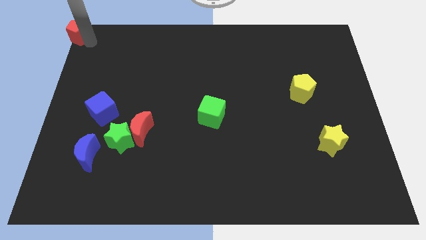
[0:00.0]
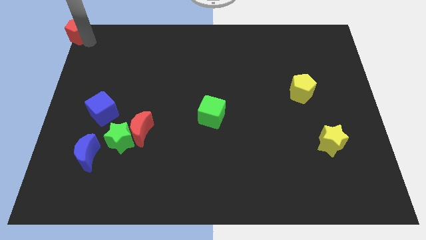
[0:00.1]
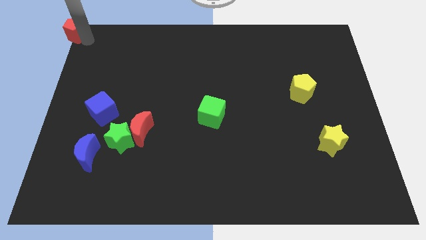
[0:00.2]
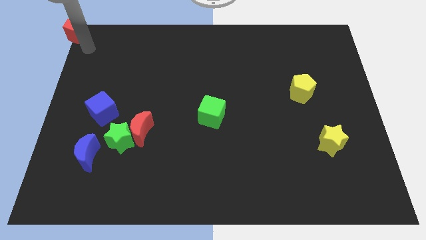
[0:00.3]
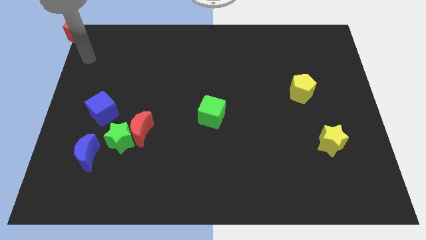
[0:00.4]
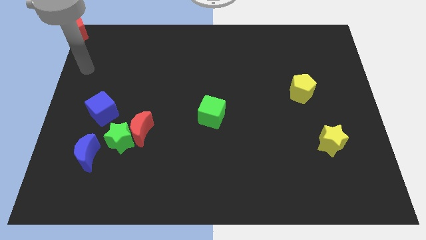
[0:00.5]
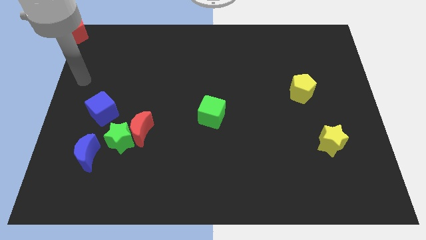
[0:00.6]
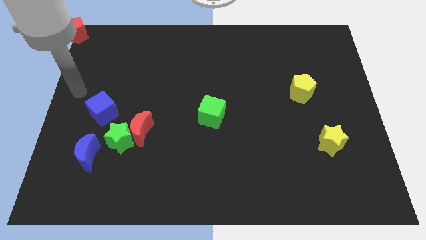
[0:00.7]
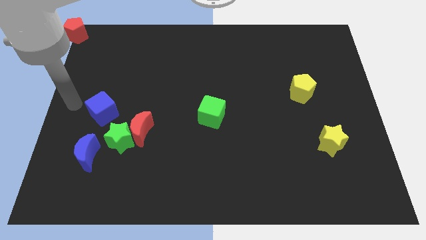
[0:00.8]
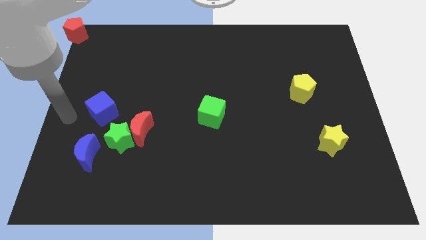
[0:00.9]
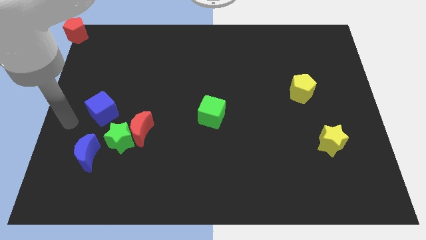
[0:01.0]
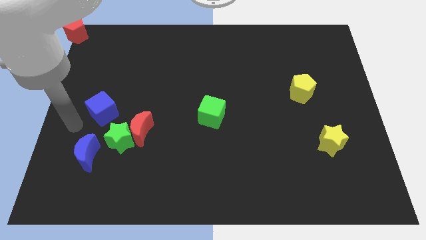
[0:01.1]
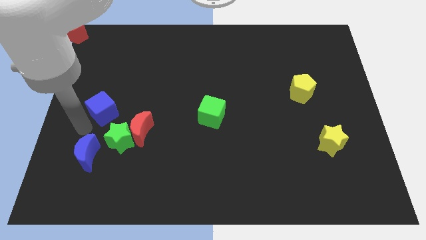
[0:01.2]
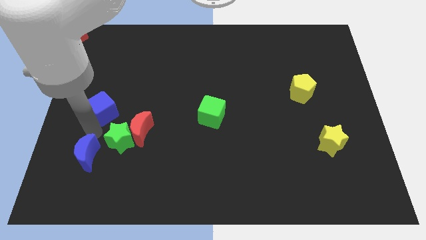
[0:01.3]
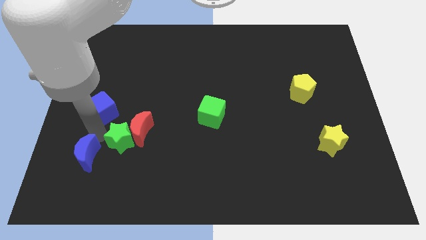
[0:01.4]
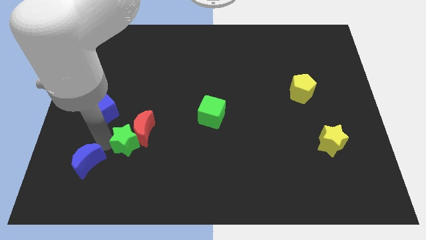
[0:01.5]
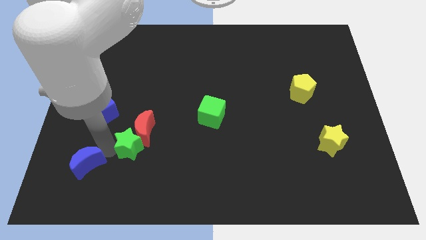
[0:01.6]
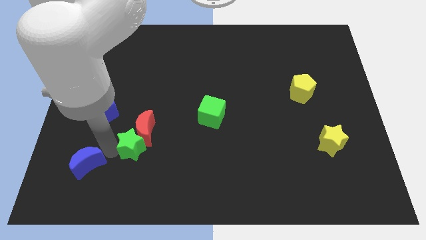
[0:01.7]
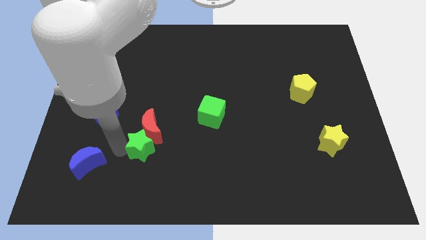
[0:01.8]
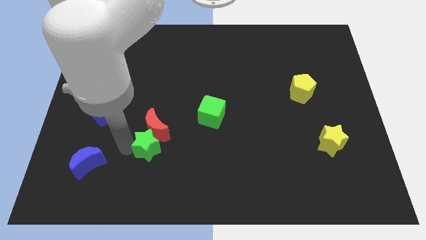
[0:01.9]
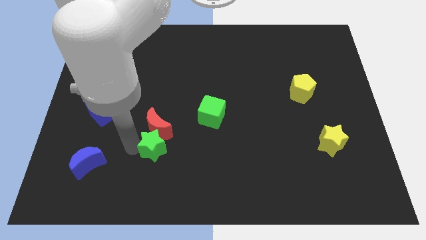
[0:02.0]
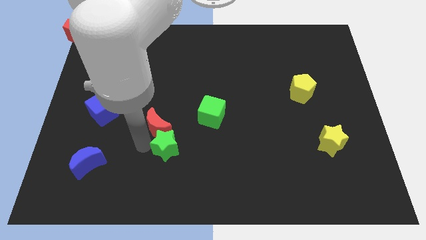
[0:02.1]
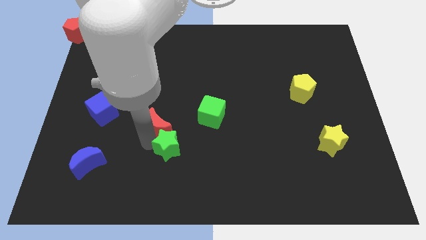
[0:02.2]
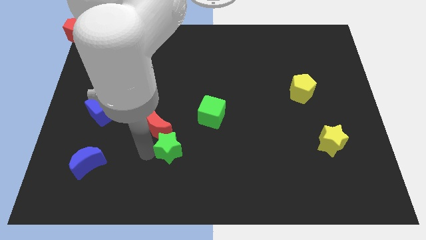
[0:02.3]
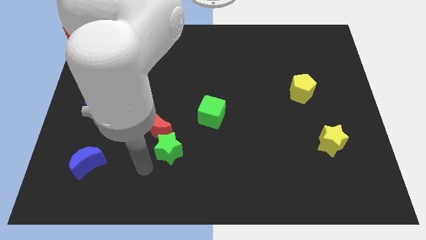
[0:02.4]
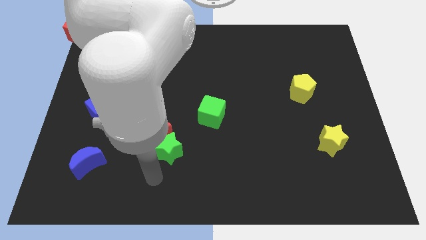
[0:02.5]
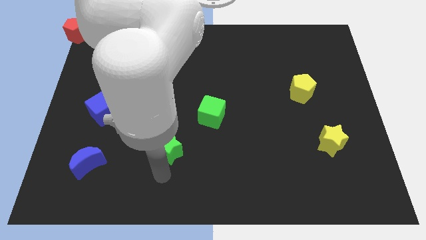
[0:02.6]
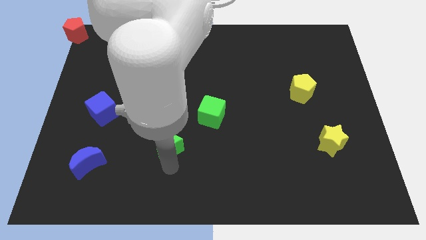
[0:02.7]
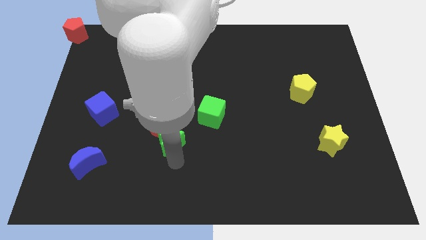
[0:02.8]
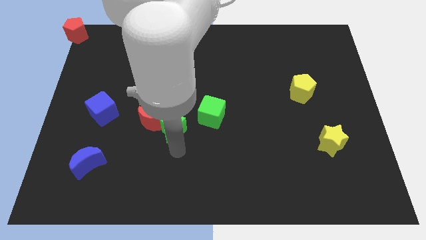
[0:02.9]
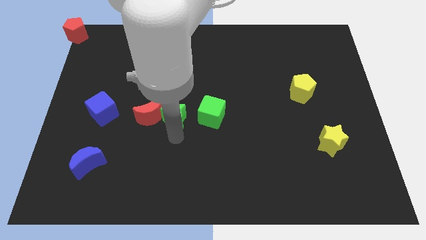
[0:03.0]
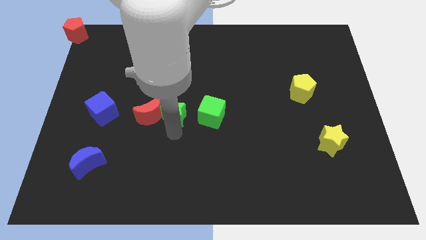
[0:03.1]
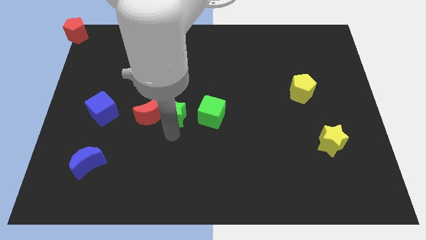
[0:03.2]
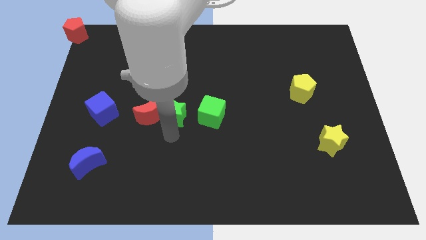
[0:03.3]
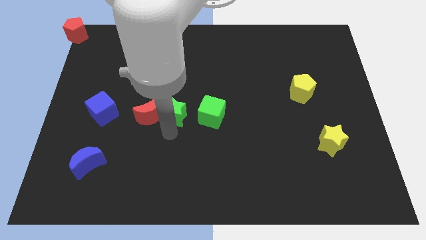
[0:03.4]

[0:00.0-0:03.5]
place the green star right to the red moon

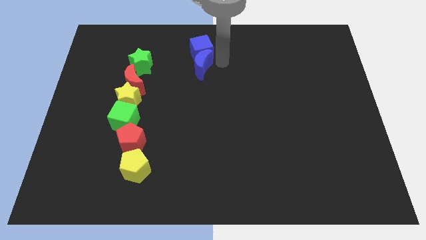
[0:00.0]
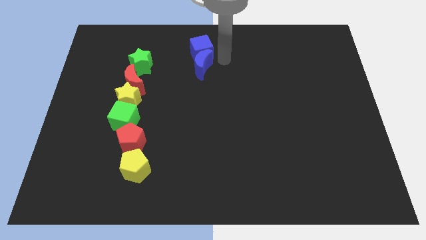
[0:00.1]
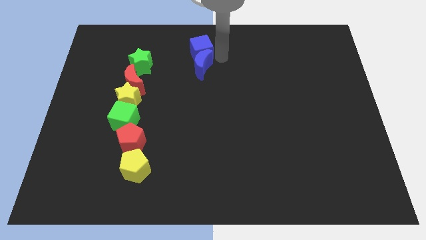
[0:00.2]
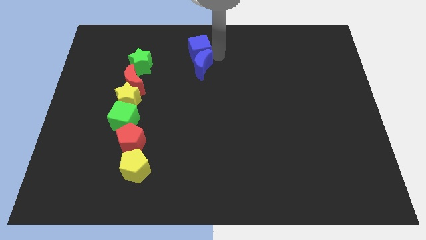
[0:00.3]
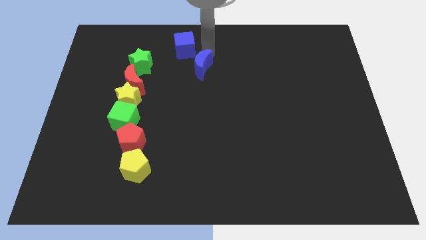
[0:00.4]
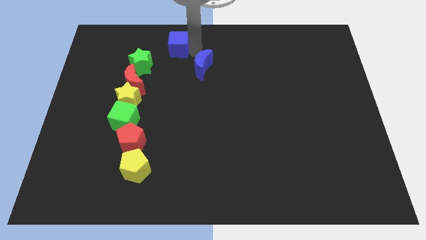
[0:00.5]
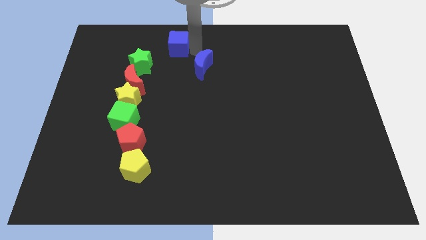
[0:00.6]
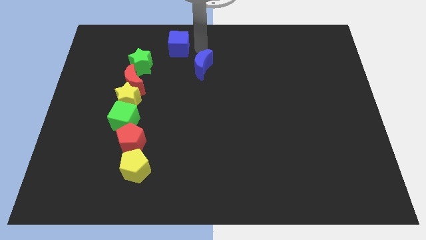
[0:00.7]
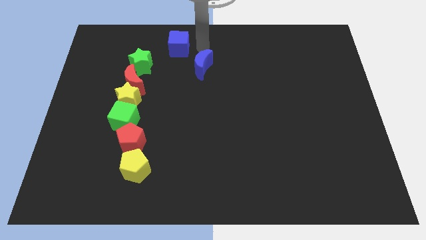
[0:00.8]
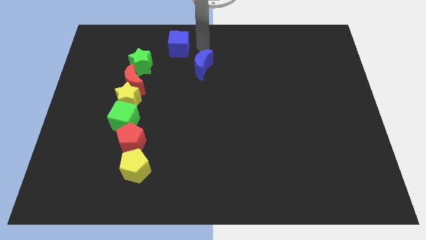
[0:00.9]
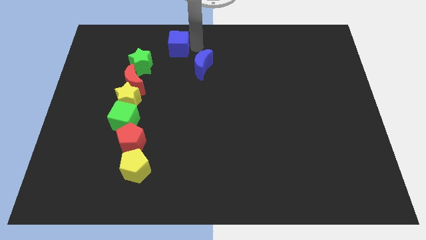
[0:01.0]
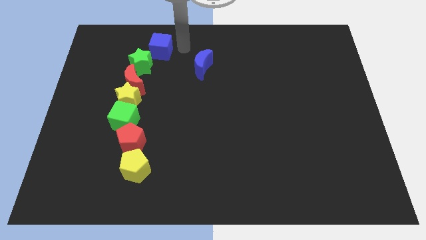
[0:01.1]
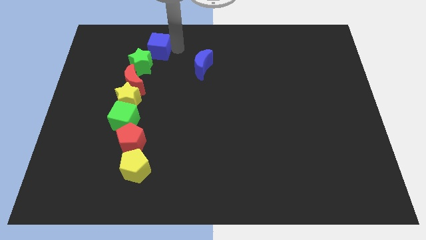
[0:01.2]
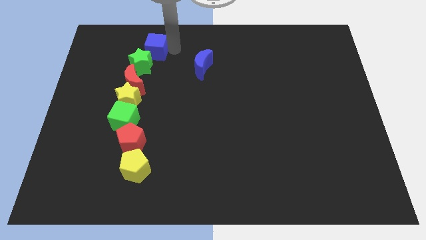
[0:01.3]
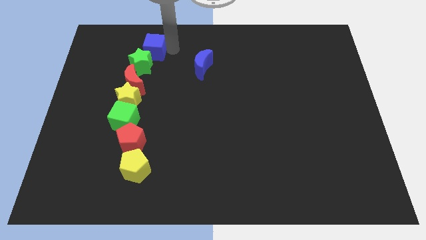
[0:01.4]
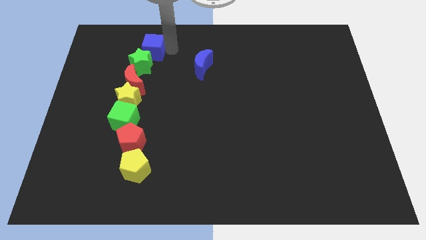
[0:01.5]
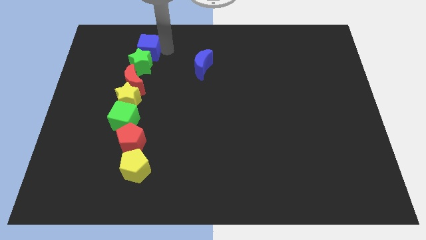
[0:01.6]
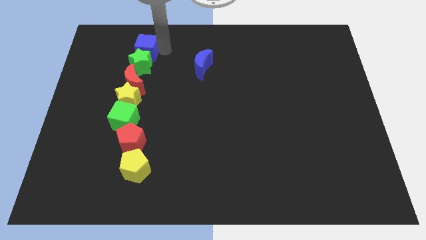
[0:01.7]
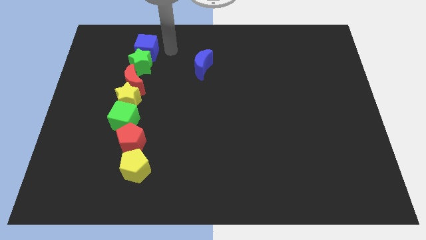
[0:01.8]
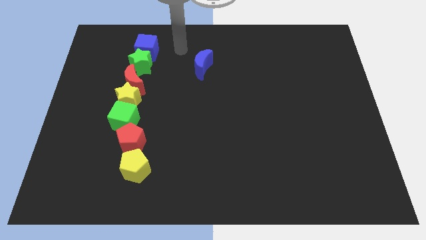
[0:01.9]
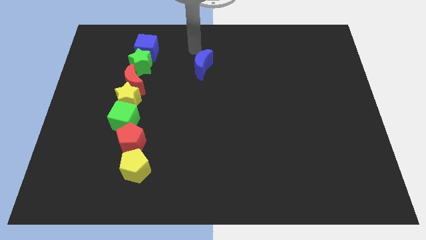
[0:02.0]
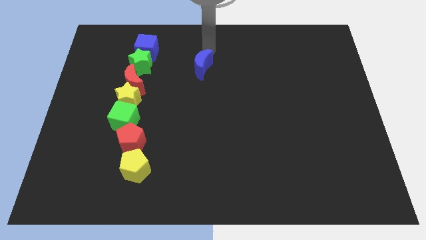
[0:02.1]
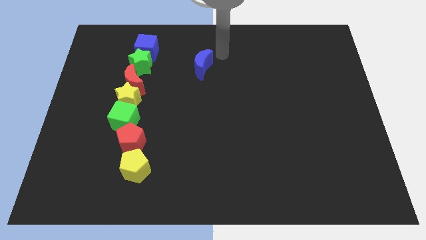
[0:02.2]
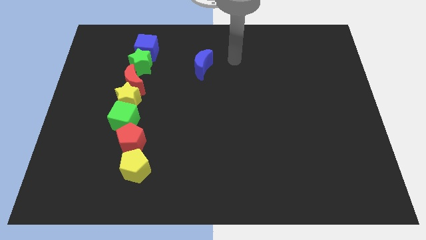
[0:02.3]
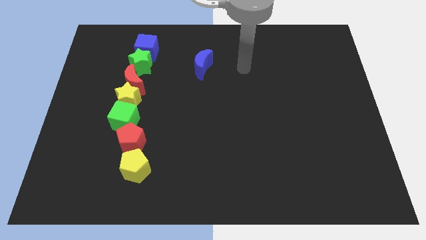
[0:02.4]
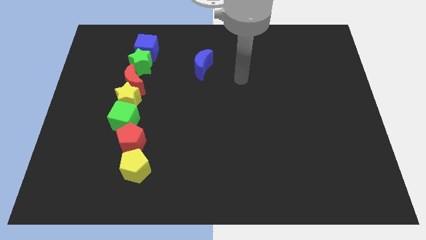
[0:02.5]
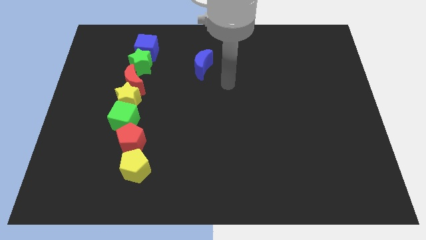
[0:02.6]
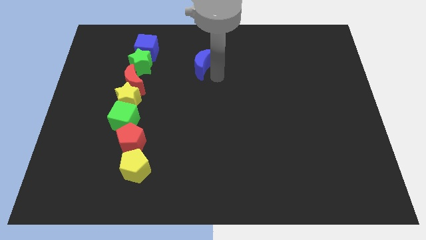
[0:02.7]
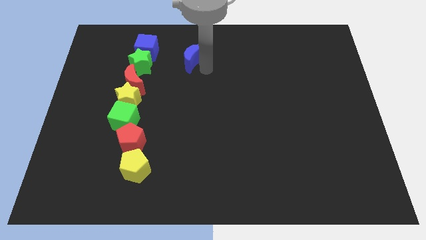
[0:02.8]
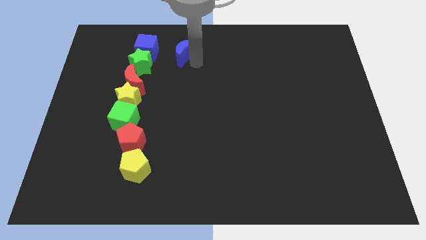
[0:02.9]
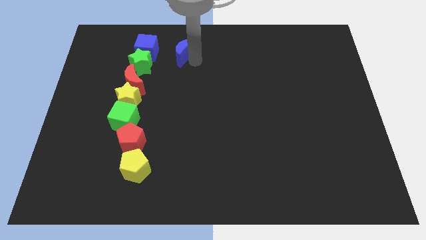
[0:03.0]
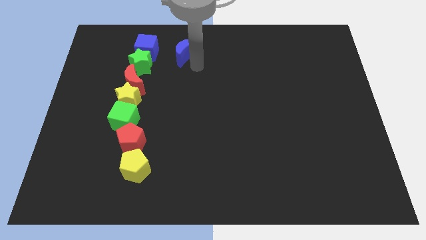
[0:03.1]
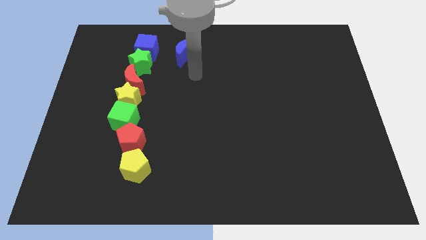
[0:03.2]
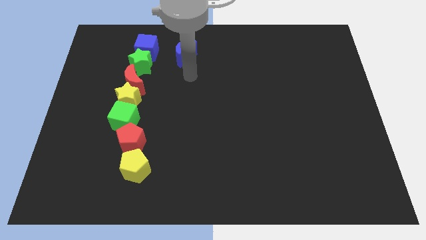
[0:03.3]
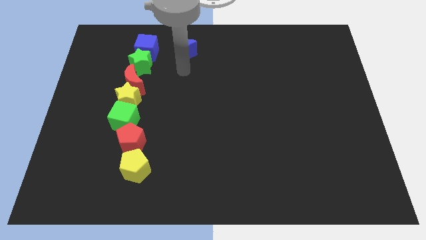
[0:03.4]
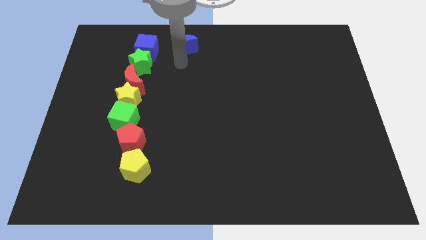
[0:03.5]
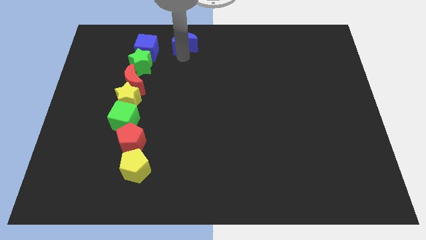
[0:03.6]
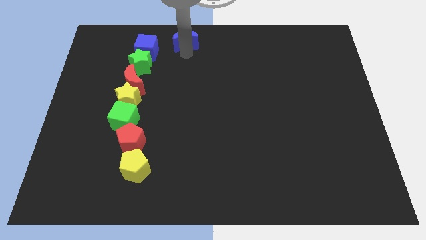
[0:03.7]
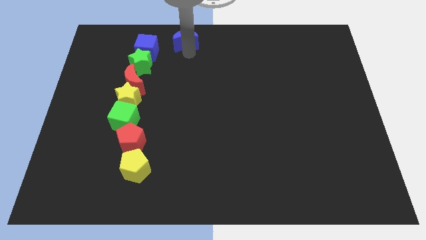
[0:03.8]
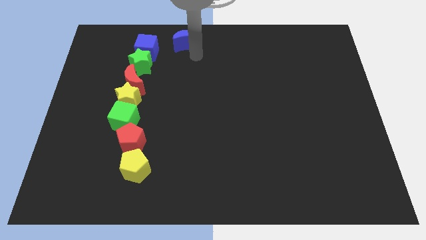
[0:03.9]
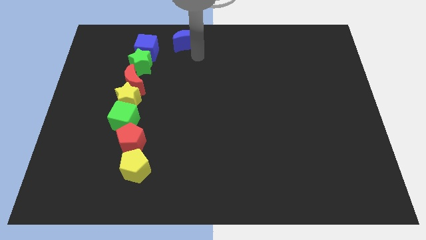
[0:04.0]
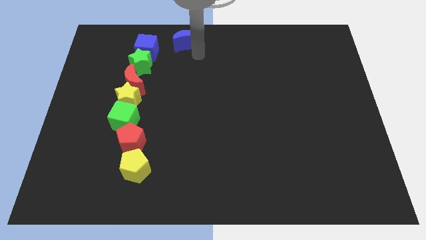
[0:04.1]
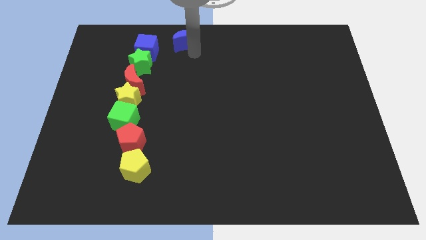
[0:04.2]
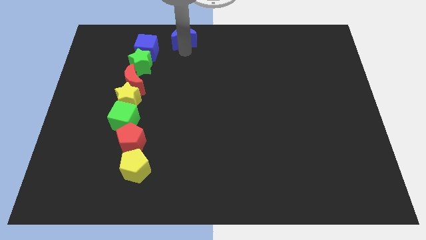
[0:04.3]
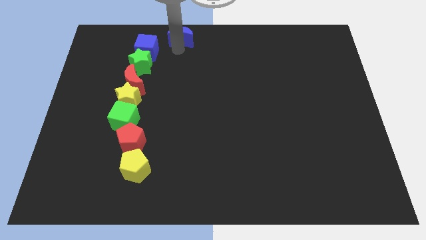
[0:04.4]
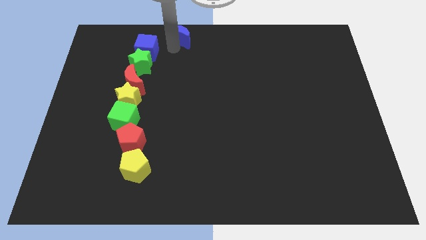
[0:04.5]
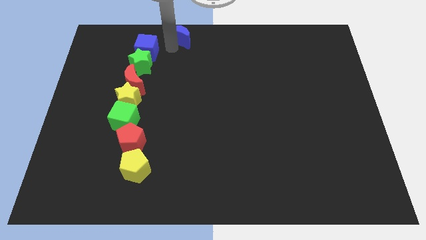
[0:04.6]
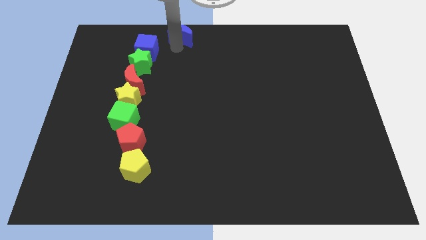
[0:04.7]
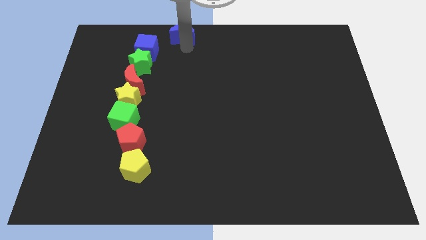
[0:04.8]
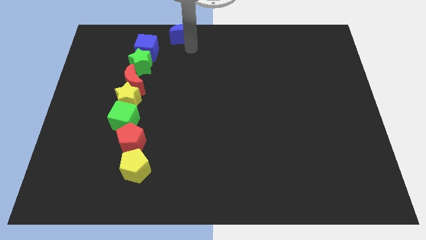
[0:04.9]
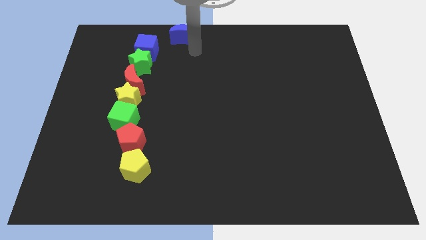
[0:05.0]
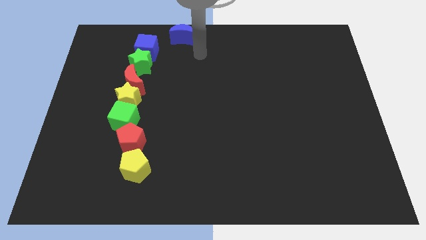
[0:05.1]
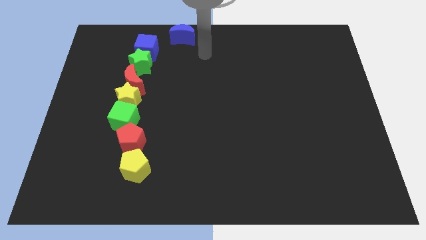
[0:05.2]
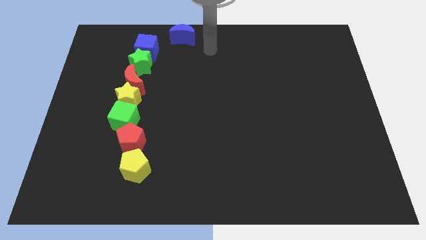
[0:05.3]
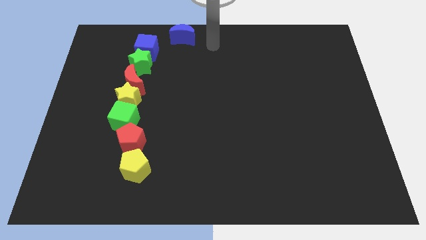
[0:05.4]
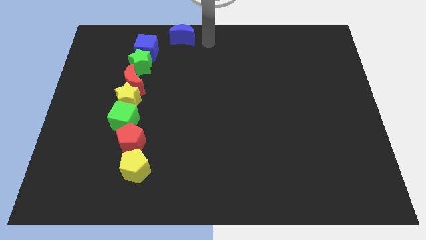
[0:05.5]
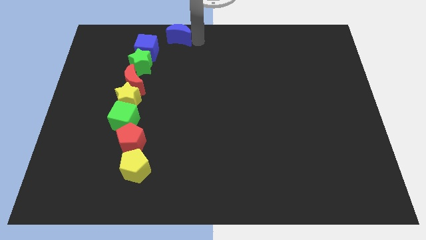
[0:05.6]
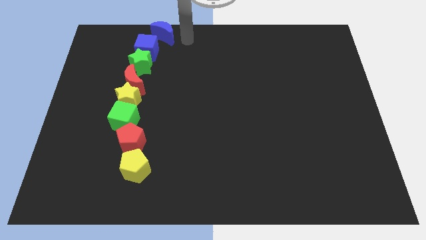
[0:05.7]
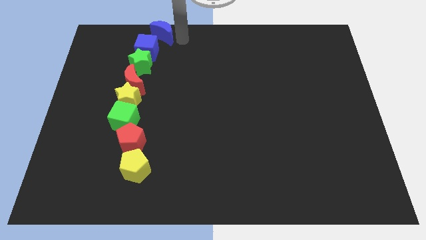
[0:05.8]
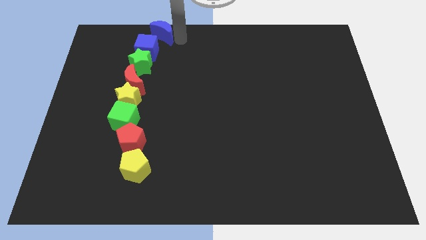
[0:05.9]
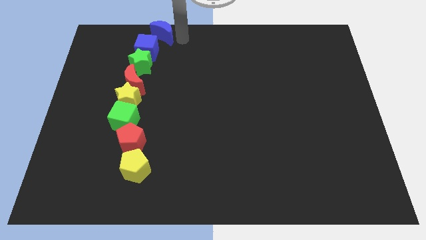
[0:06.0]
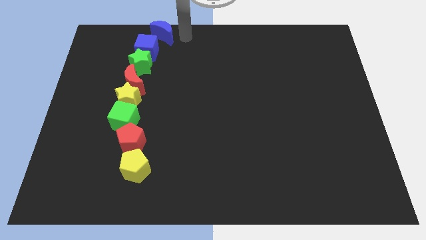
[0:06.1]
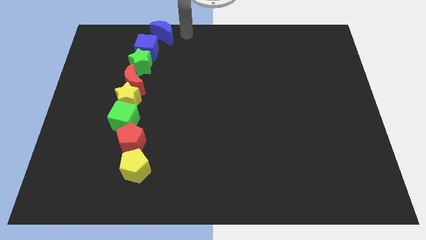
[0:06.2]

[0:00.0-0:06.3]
put the blue blocks above the green star
